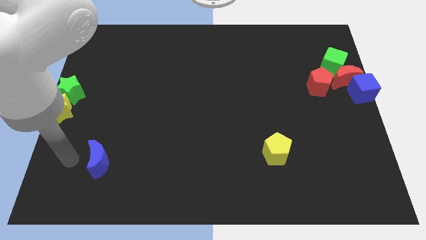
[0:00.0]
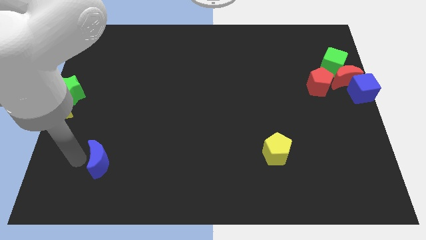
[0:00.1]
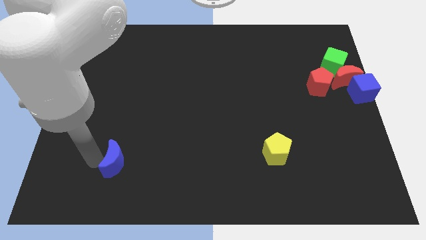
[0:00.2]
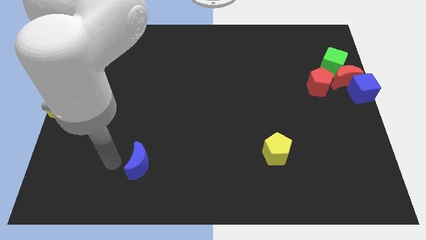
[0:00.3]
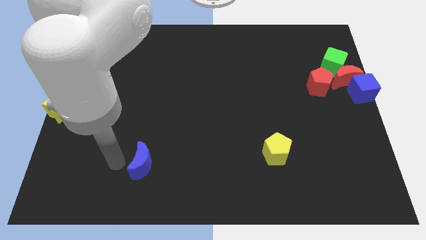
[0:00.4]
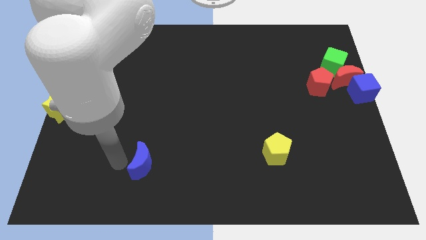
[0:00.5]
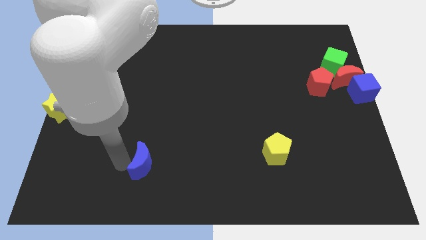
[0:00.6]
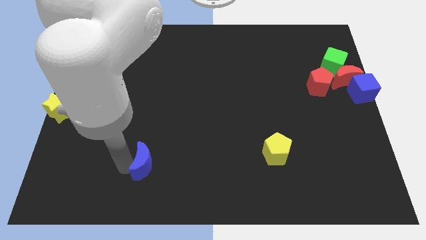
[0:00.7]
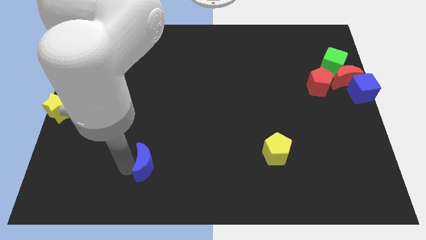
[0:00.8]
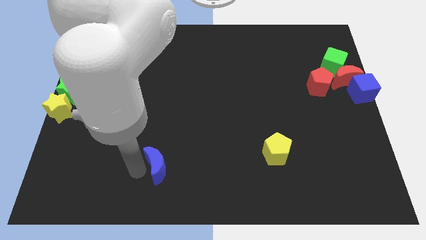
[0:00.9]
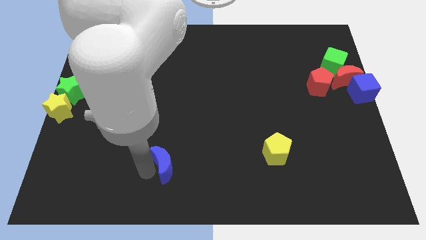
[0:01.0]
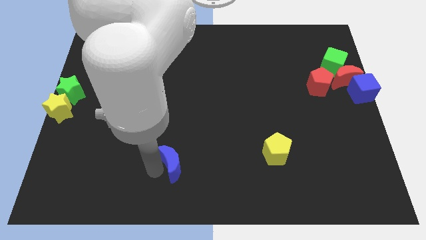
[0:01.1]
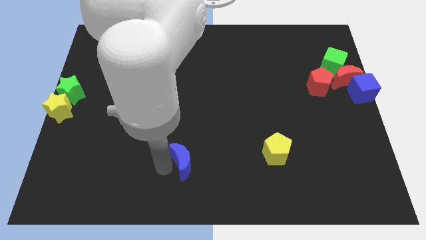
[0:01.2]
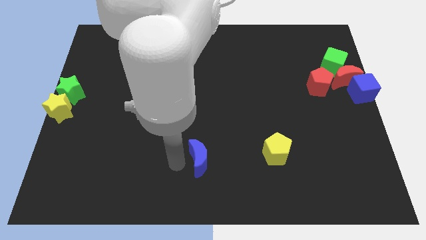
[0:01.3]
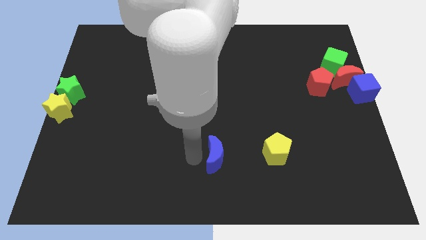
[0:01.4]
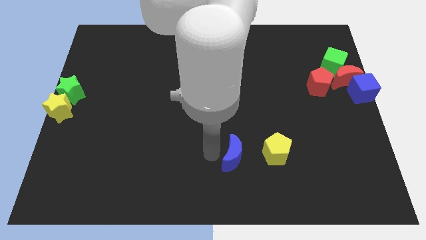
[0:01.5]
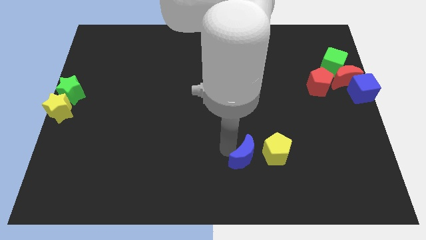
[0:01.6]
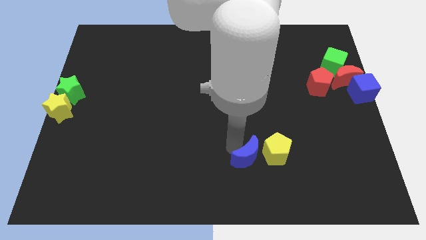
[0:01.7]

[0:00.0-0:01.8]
move the blue crescent close to the left of the yellow pentagon

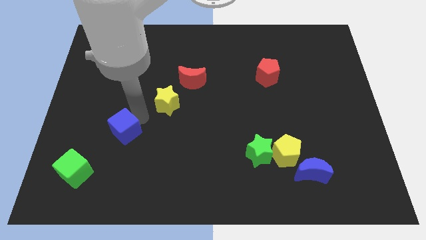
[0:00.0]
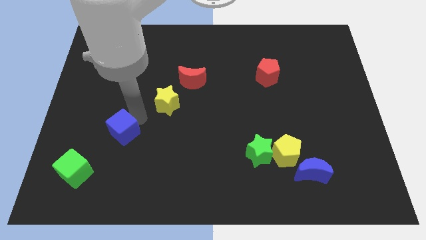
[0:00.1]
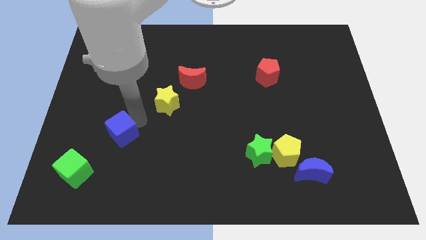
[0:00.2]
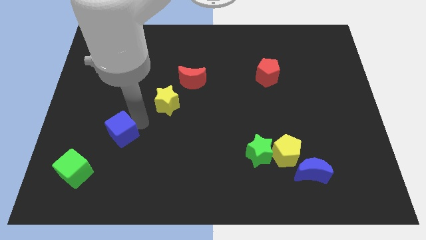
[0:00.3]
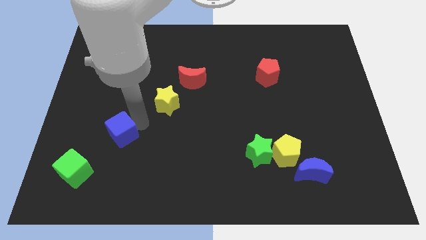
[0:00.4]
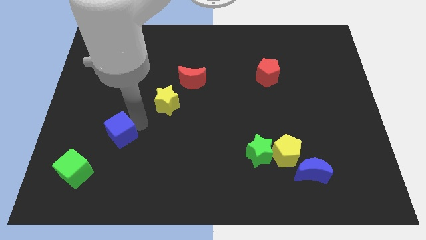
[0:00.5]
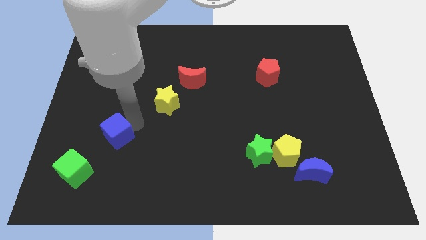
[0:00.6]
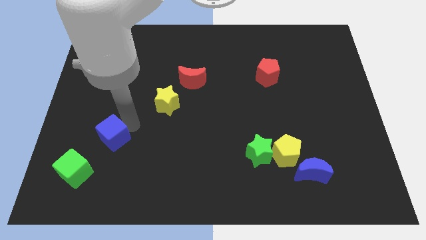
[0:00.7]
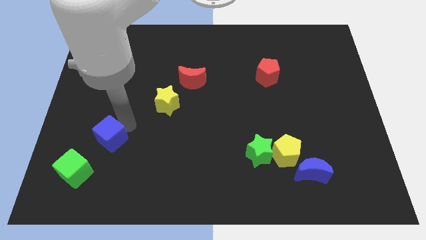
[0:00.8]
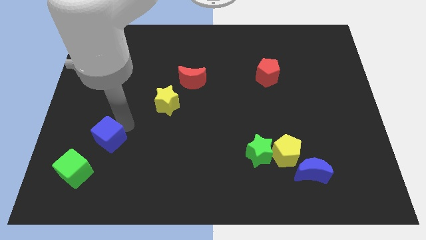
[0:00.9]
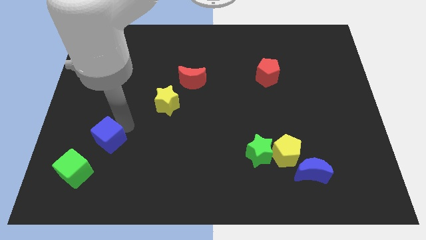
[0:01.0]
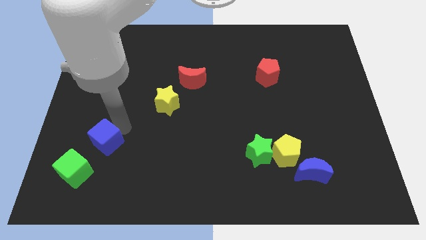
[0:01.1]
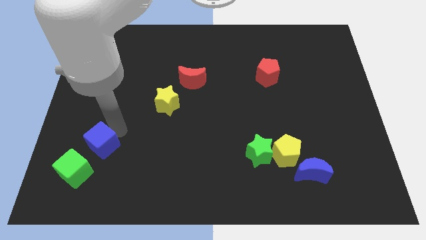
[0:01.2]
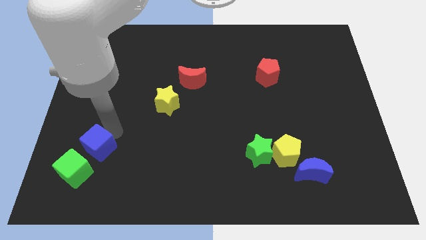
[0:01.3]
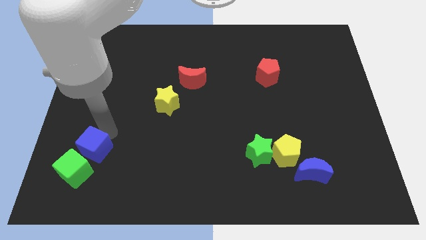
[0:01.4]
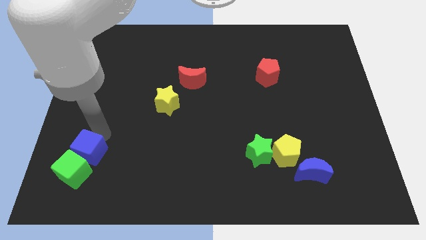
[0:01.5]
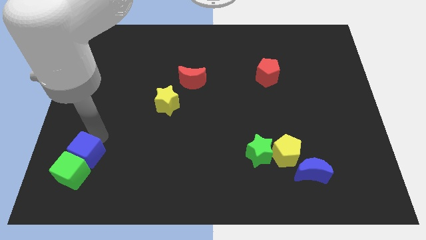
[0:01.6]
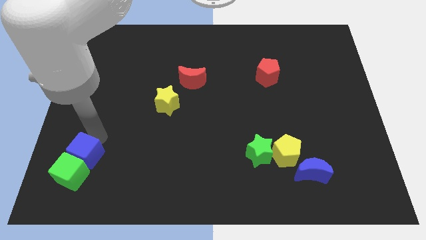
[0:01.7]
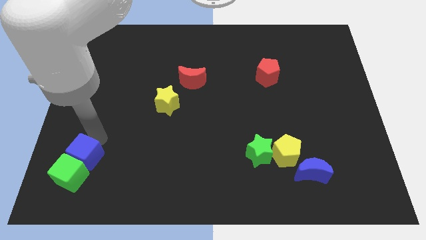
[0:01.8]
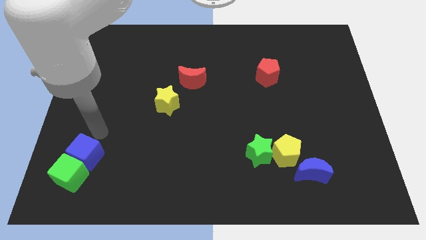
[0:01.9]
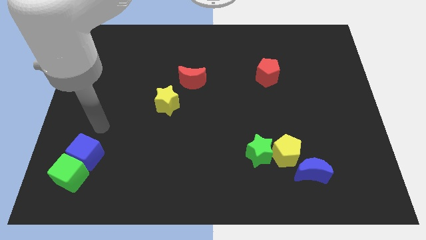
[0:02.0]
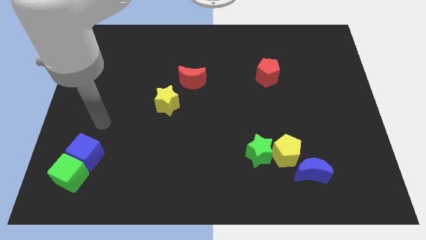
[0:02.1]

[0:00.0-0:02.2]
put the blue cube and green cube together

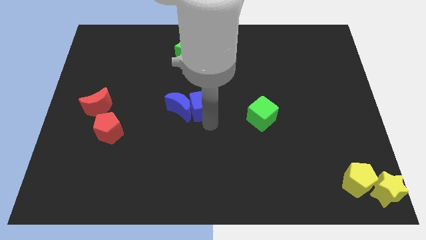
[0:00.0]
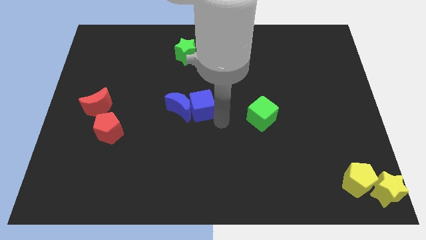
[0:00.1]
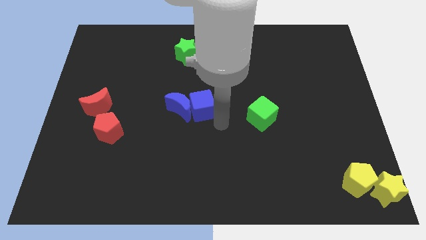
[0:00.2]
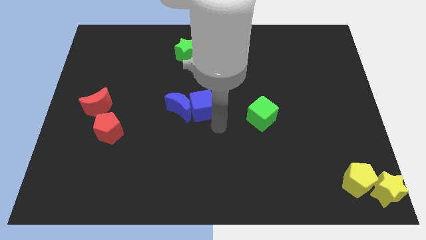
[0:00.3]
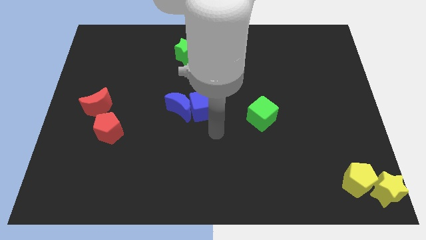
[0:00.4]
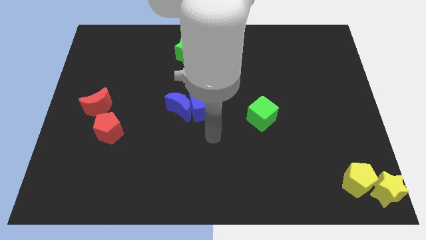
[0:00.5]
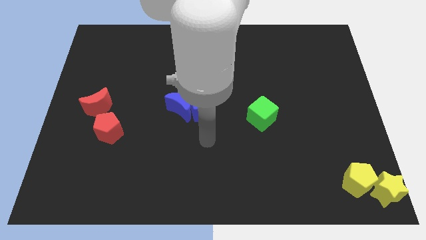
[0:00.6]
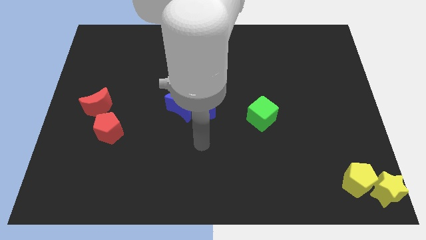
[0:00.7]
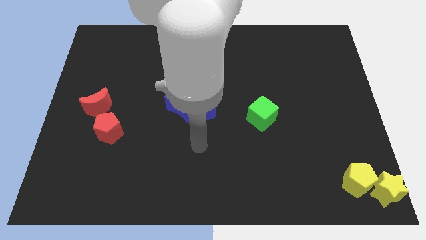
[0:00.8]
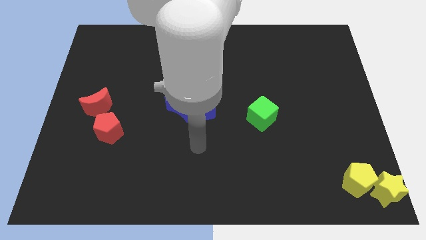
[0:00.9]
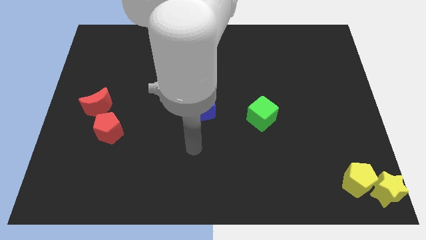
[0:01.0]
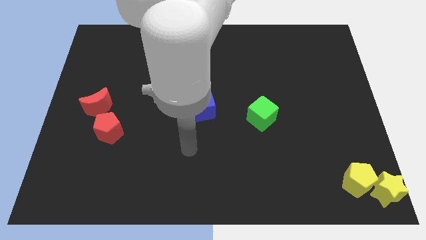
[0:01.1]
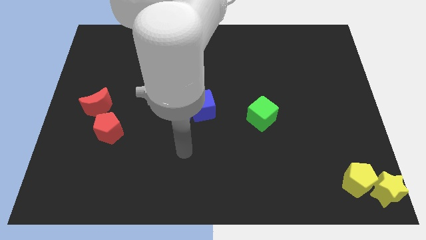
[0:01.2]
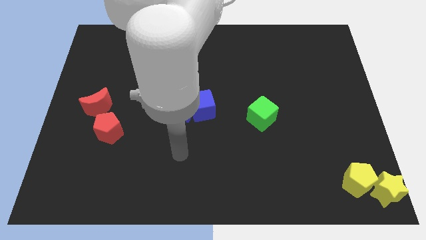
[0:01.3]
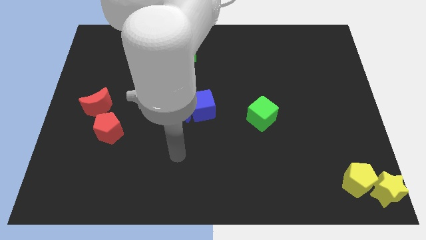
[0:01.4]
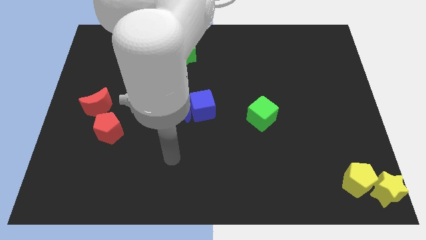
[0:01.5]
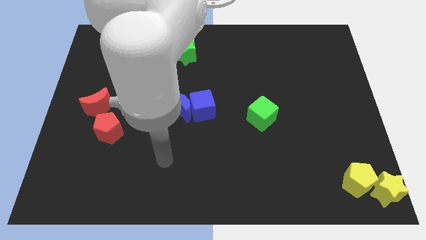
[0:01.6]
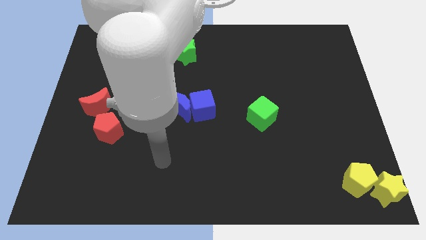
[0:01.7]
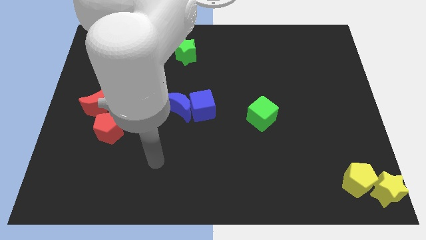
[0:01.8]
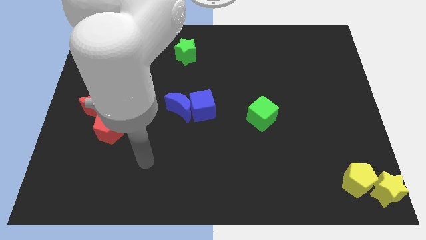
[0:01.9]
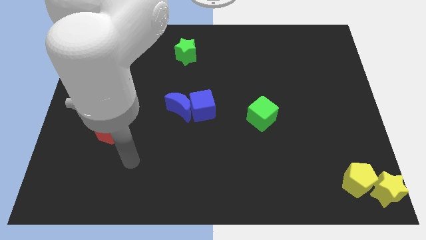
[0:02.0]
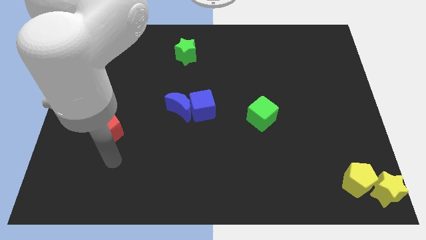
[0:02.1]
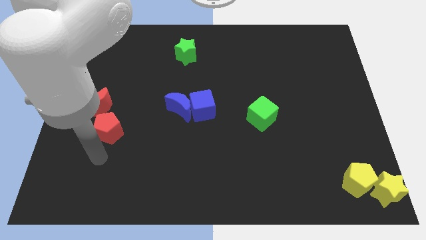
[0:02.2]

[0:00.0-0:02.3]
move your arm away from the blue cube

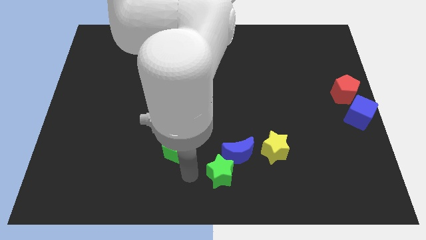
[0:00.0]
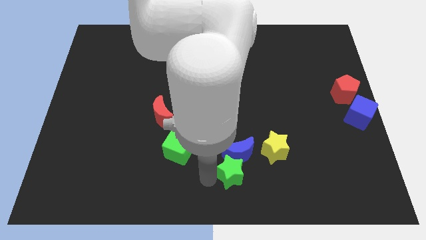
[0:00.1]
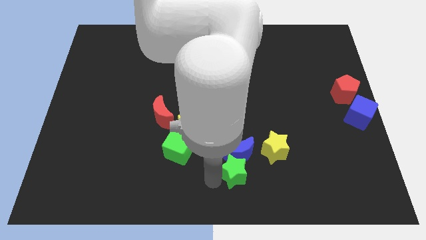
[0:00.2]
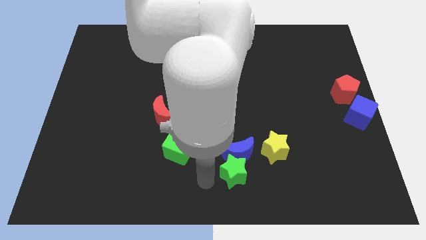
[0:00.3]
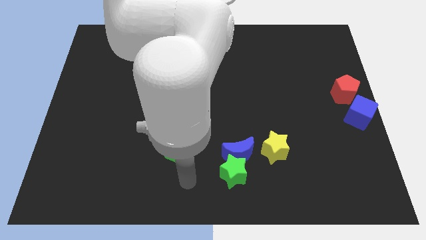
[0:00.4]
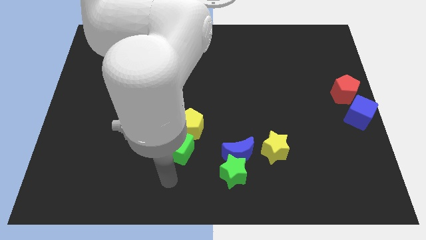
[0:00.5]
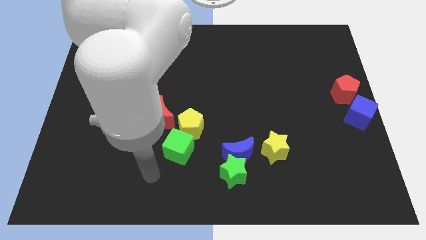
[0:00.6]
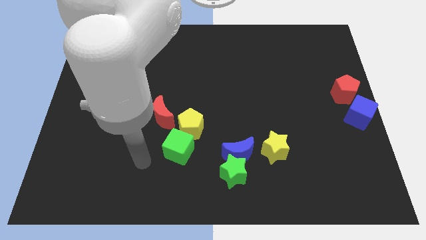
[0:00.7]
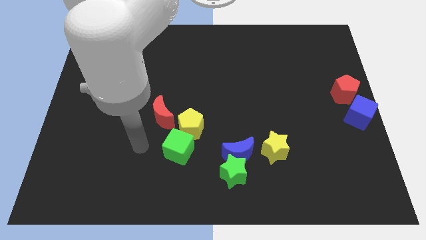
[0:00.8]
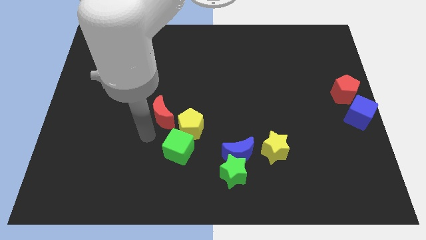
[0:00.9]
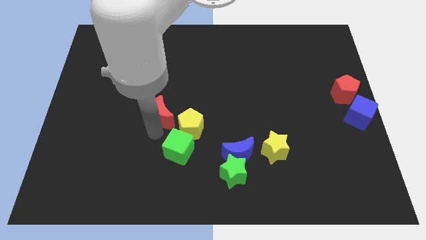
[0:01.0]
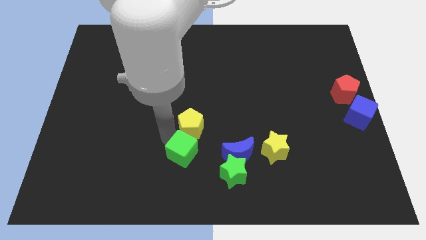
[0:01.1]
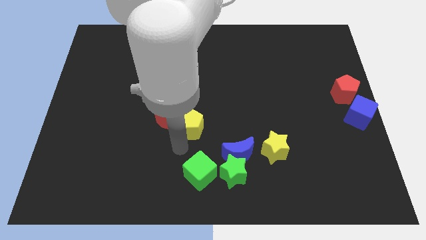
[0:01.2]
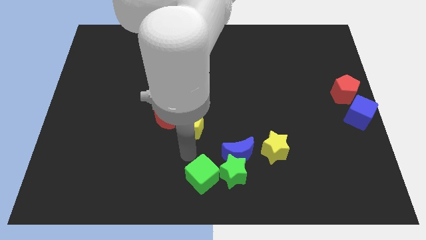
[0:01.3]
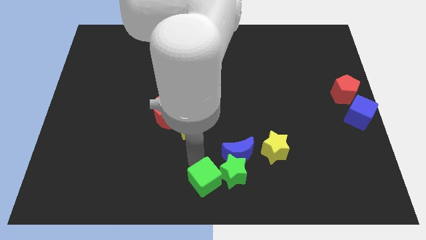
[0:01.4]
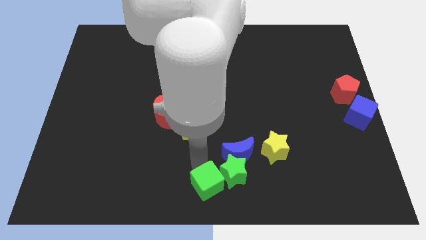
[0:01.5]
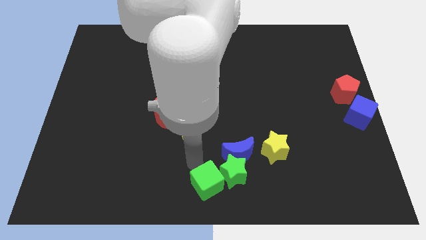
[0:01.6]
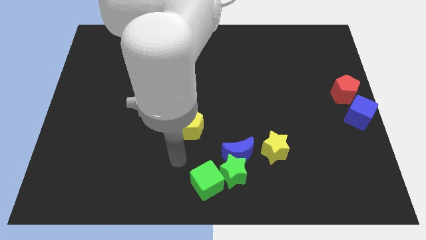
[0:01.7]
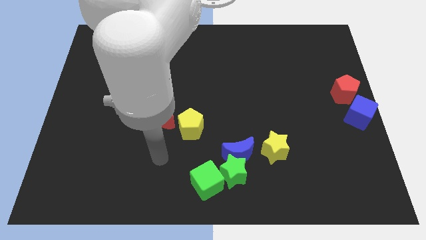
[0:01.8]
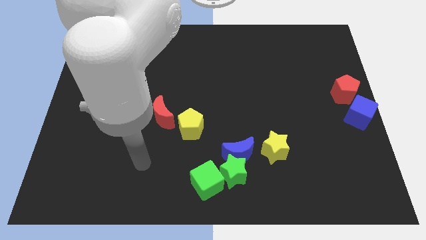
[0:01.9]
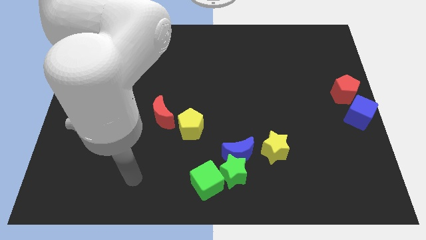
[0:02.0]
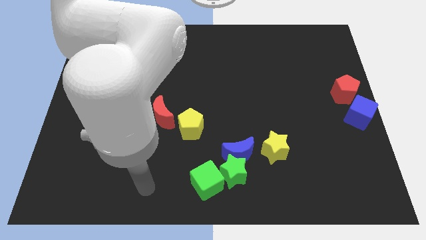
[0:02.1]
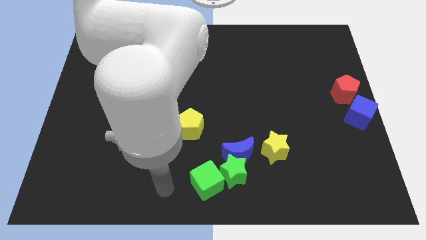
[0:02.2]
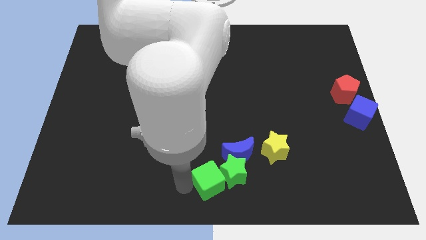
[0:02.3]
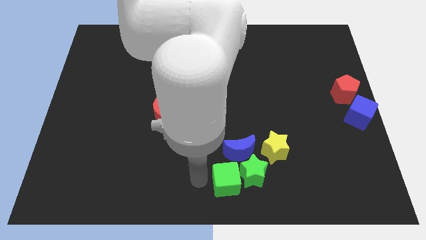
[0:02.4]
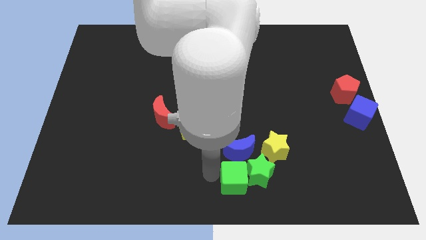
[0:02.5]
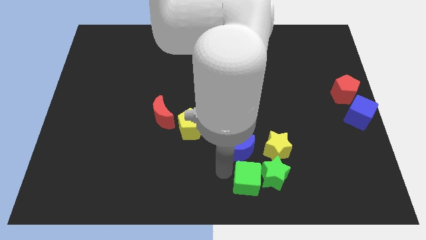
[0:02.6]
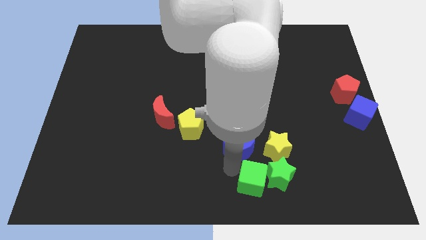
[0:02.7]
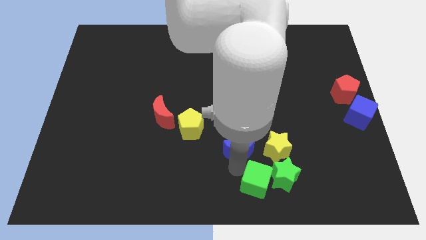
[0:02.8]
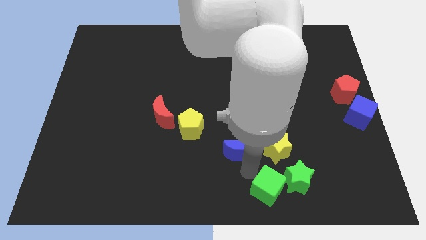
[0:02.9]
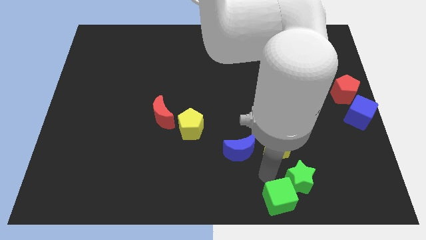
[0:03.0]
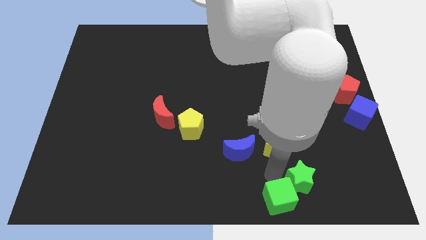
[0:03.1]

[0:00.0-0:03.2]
move the green blocks to the bottom side of the yellow star
